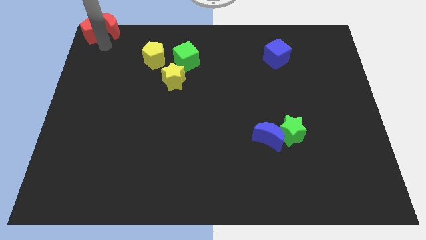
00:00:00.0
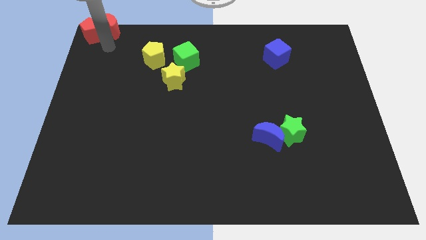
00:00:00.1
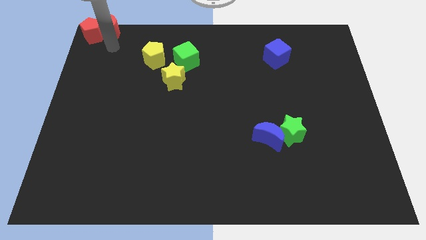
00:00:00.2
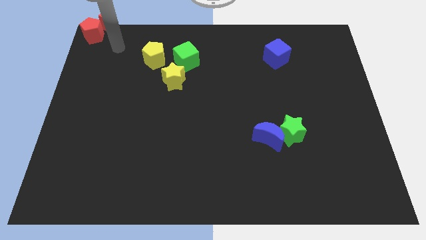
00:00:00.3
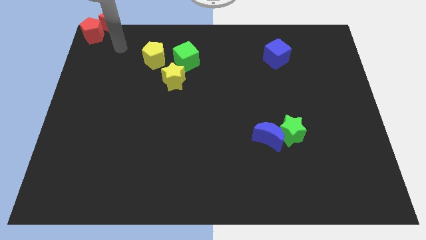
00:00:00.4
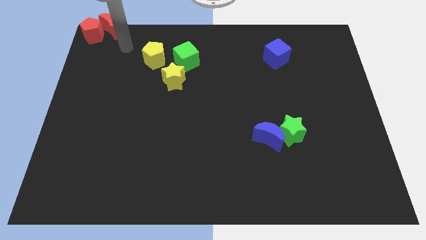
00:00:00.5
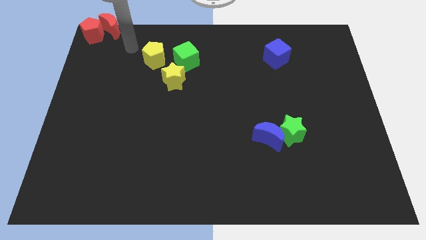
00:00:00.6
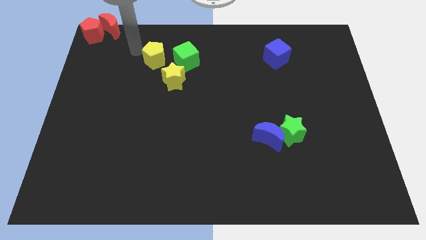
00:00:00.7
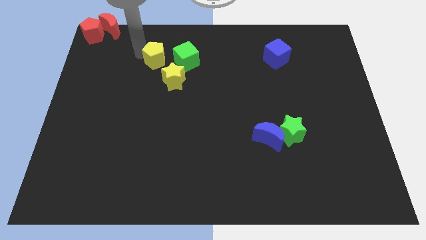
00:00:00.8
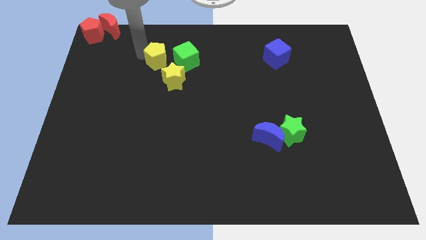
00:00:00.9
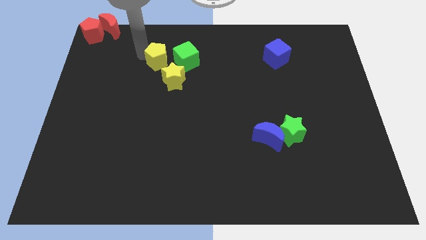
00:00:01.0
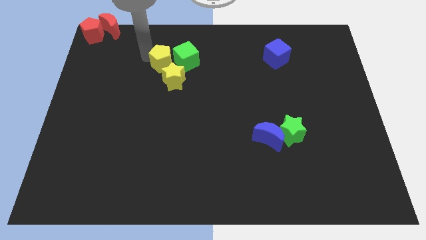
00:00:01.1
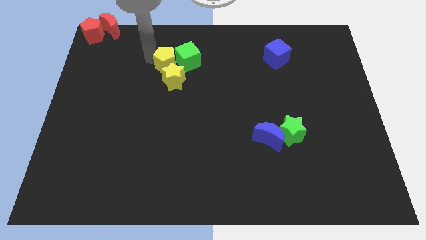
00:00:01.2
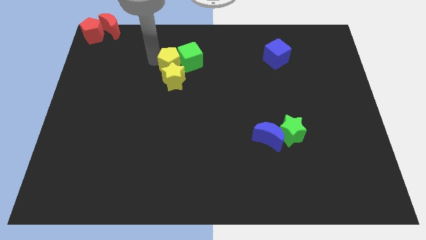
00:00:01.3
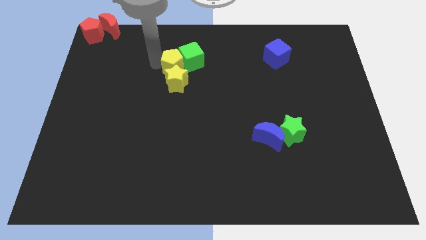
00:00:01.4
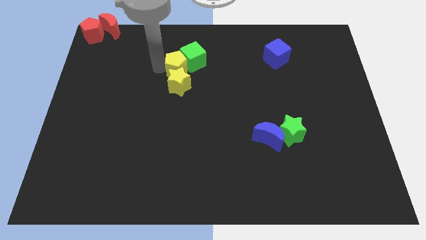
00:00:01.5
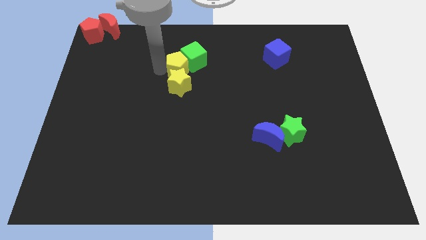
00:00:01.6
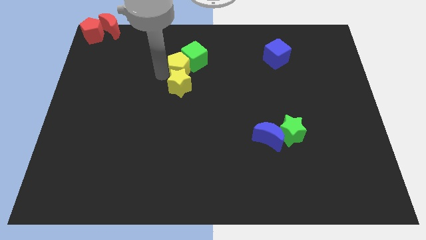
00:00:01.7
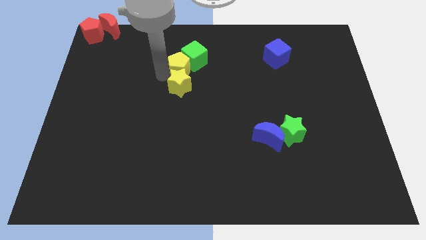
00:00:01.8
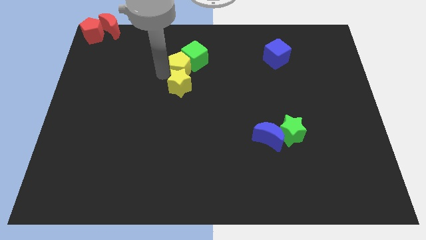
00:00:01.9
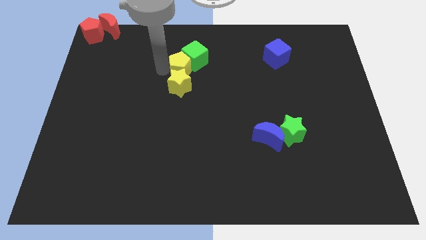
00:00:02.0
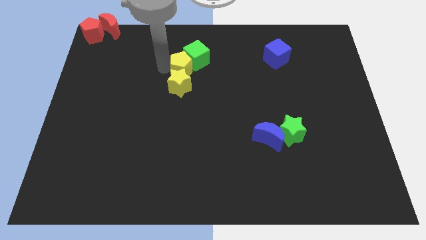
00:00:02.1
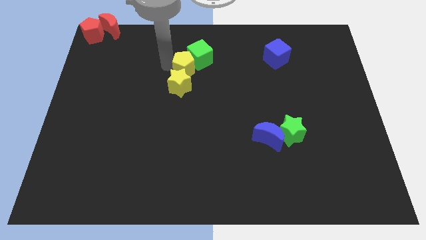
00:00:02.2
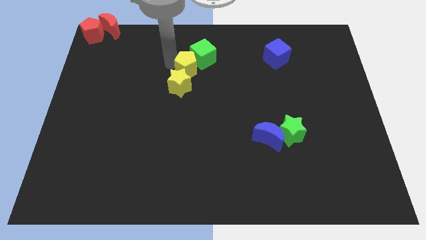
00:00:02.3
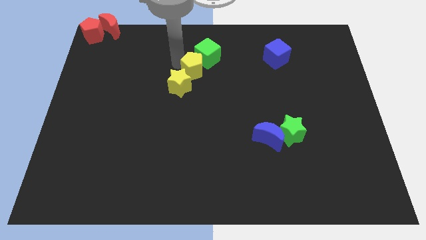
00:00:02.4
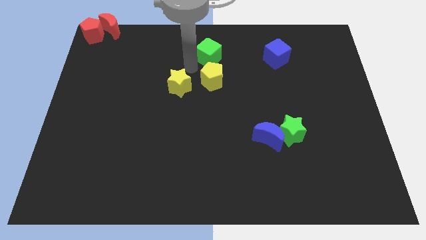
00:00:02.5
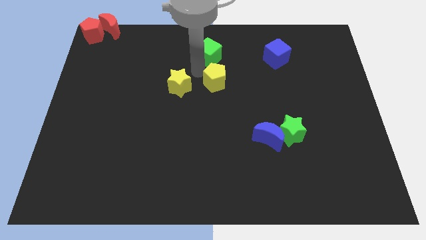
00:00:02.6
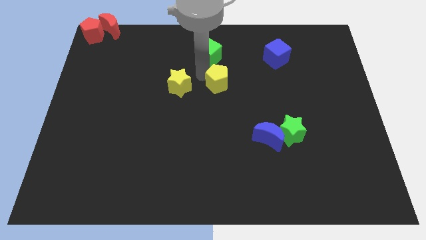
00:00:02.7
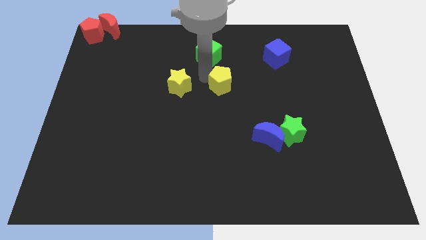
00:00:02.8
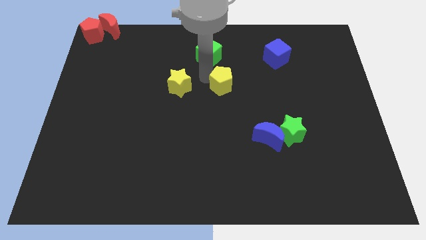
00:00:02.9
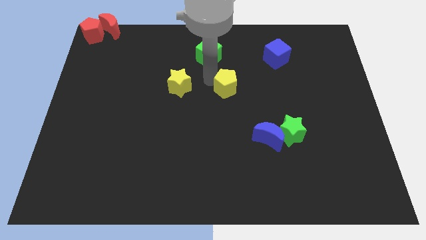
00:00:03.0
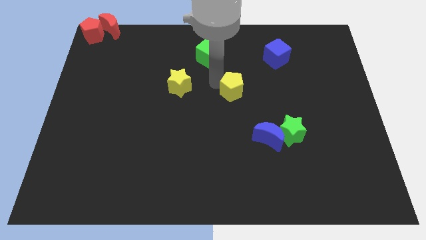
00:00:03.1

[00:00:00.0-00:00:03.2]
place yellow pentagon to the right of yellow star

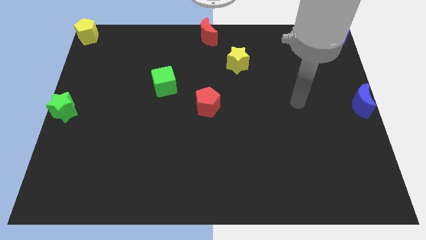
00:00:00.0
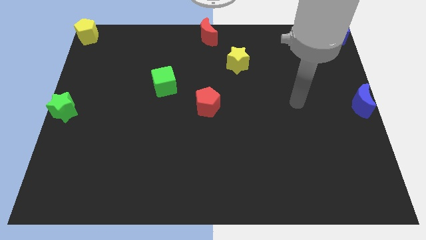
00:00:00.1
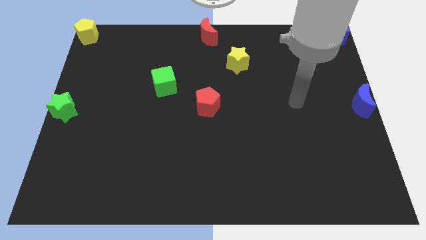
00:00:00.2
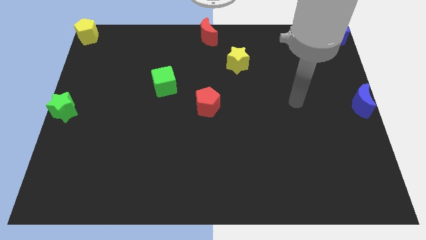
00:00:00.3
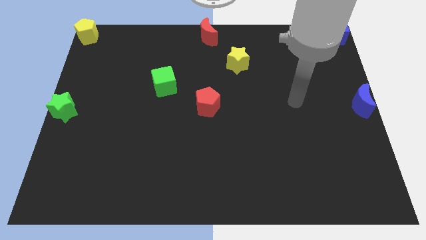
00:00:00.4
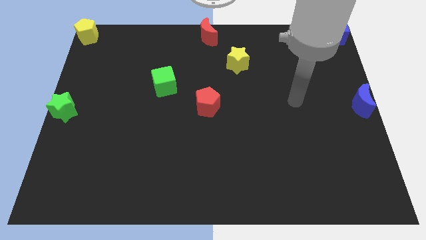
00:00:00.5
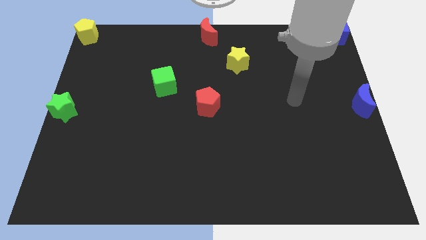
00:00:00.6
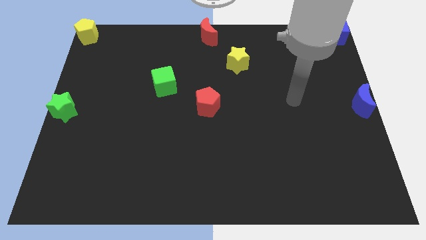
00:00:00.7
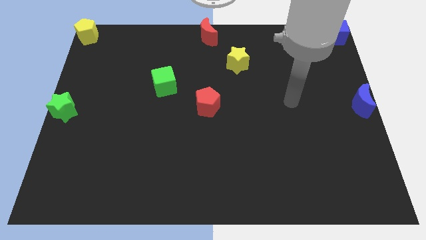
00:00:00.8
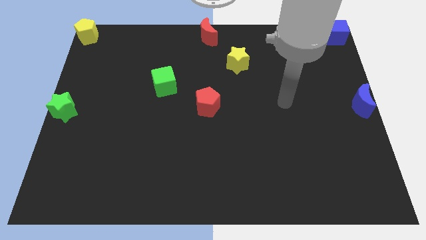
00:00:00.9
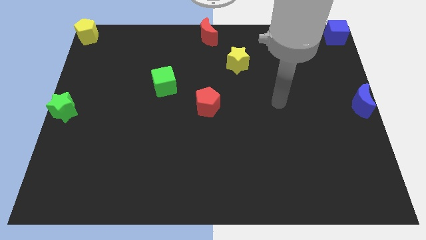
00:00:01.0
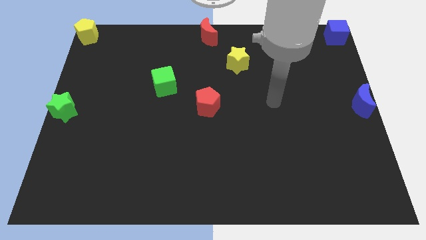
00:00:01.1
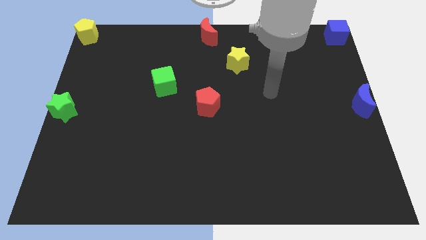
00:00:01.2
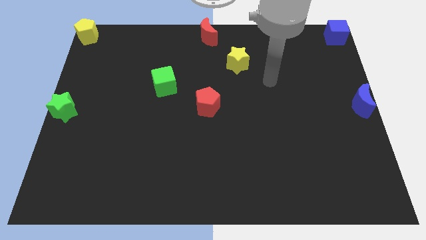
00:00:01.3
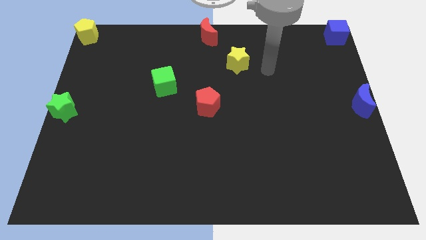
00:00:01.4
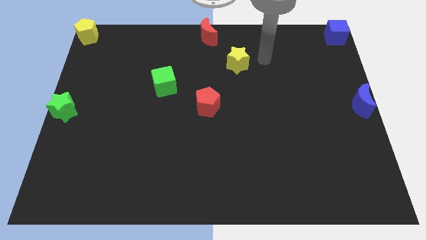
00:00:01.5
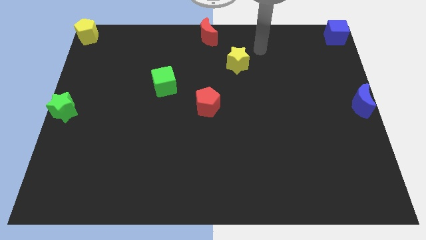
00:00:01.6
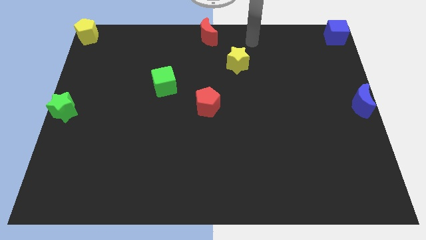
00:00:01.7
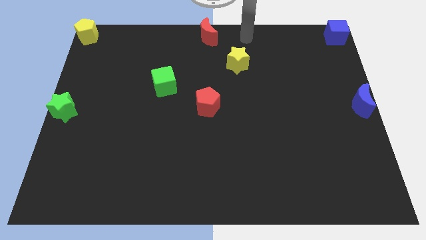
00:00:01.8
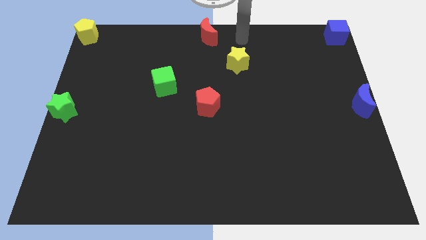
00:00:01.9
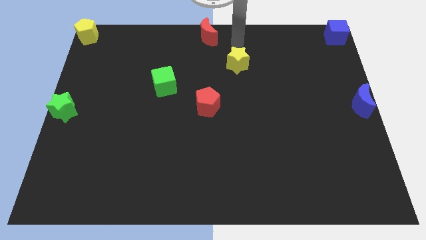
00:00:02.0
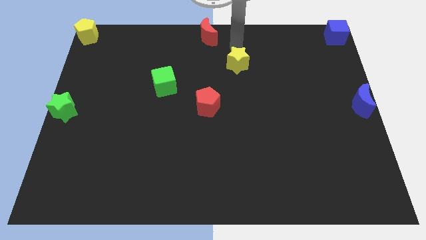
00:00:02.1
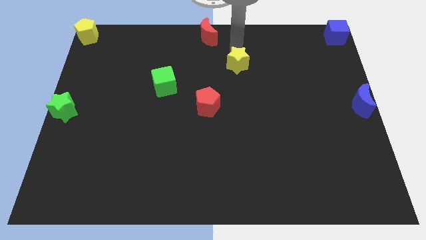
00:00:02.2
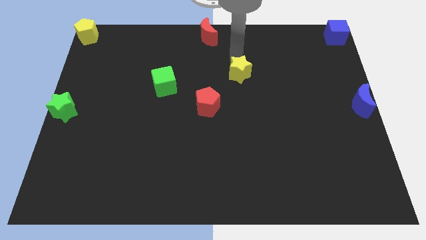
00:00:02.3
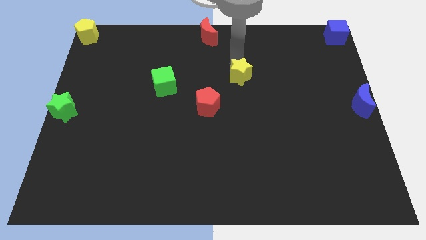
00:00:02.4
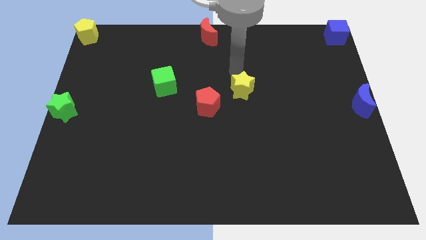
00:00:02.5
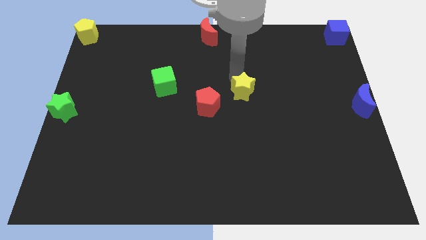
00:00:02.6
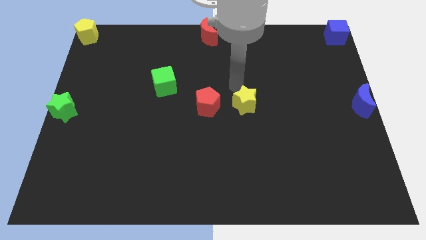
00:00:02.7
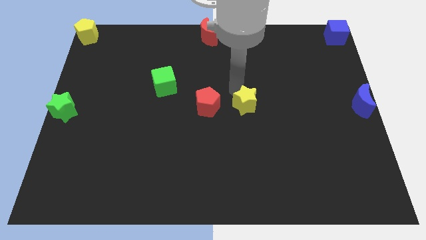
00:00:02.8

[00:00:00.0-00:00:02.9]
place the yellow star parallel to red pentagon

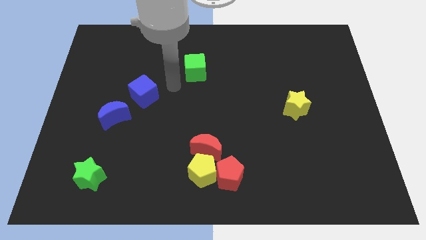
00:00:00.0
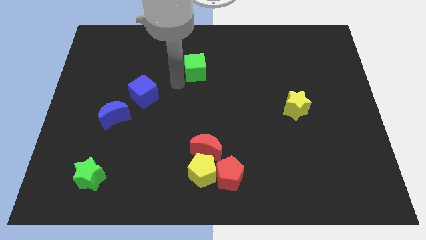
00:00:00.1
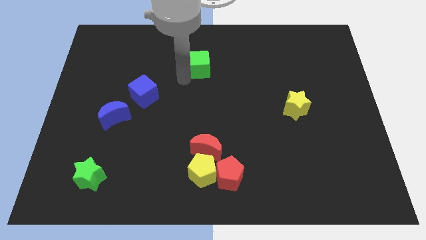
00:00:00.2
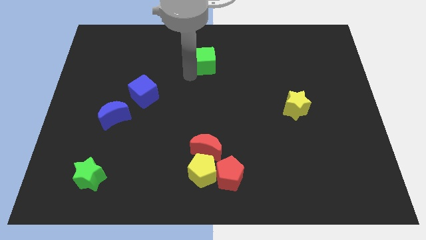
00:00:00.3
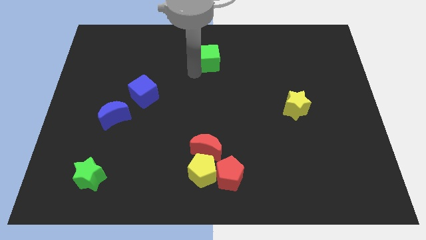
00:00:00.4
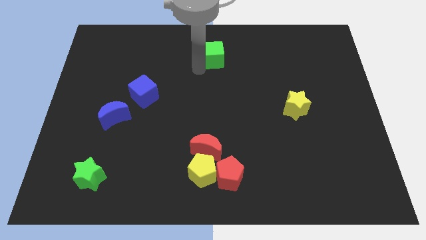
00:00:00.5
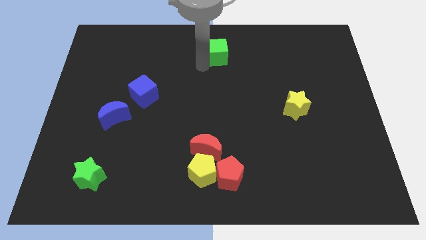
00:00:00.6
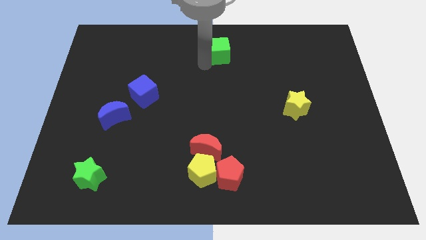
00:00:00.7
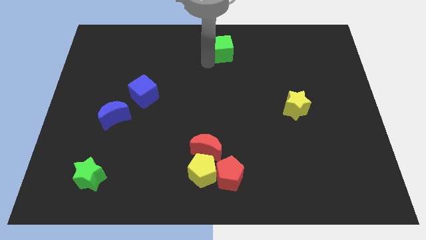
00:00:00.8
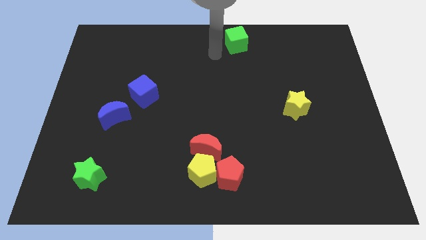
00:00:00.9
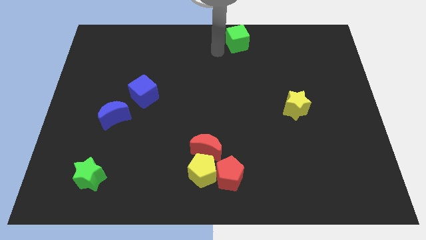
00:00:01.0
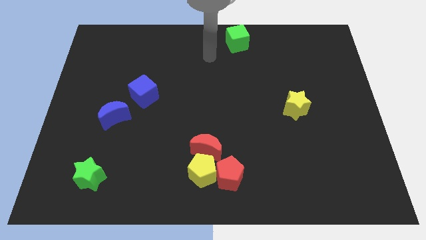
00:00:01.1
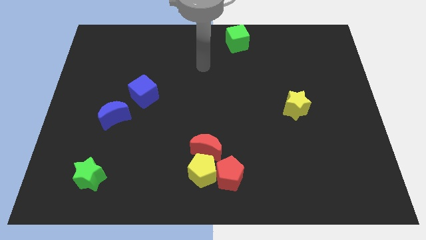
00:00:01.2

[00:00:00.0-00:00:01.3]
push the green cube near to the top center

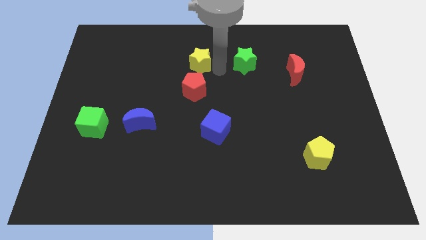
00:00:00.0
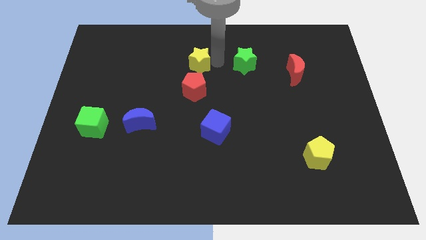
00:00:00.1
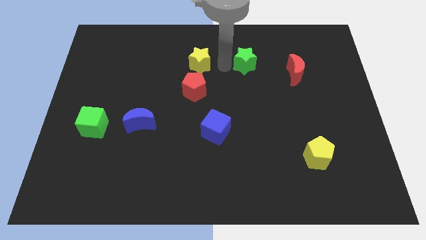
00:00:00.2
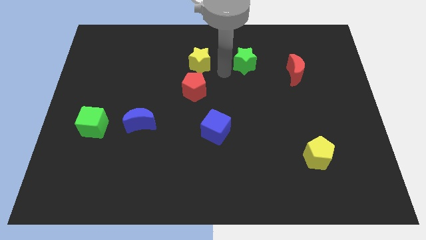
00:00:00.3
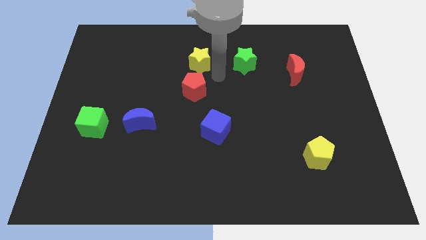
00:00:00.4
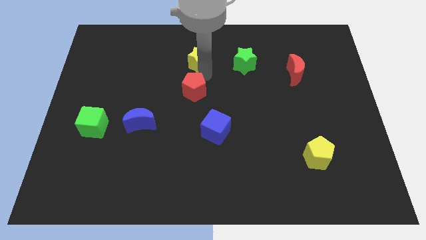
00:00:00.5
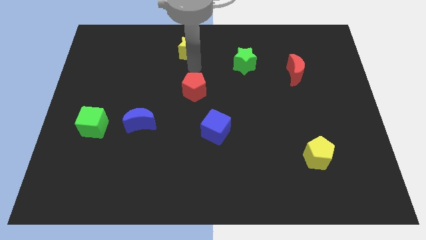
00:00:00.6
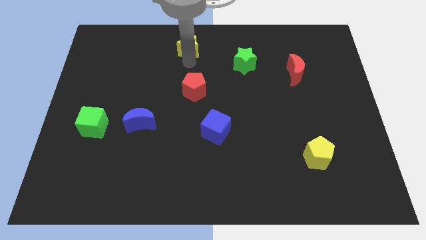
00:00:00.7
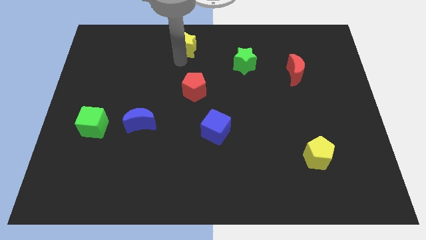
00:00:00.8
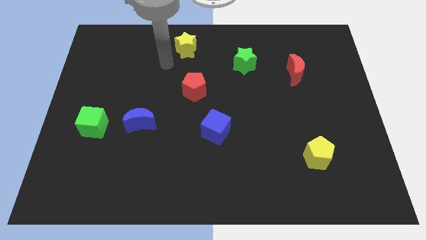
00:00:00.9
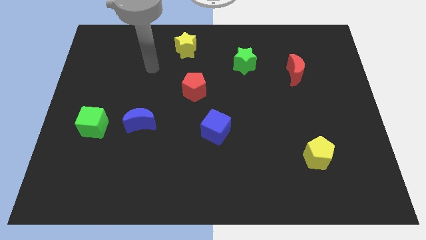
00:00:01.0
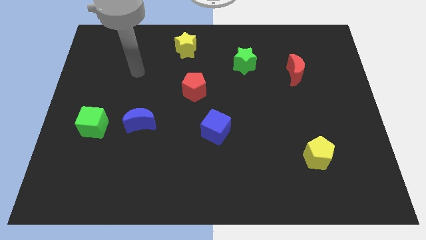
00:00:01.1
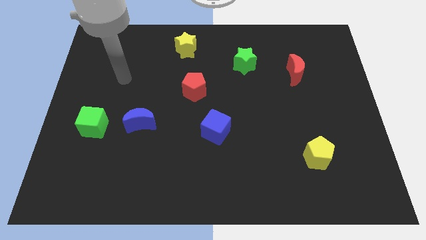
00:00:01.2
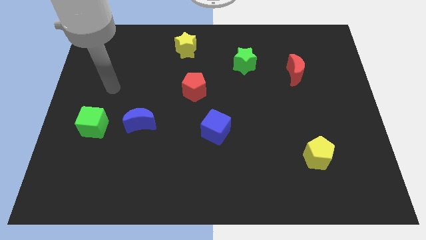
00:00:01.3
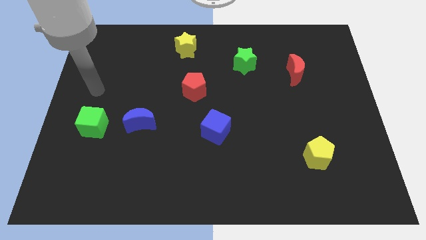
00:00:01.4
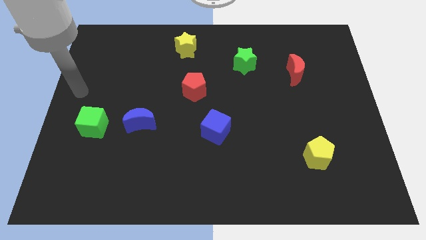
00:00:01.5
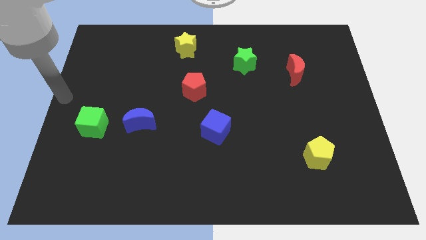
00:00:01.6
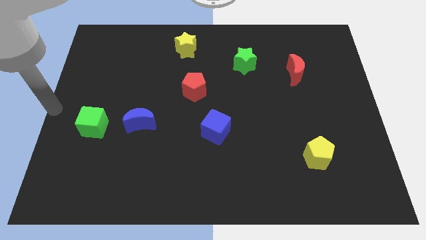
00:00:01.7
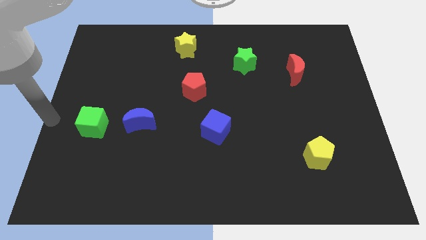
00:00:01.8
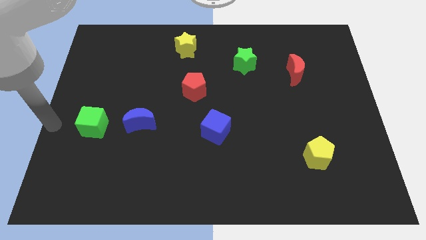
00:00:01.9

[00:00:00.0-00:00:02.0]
push yellow star towards the top of board
